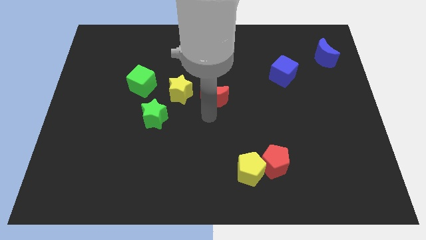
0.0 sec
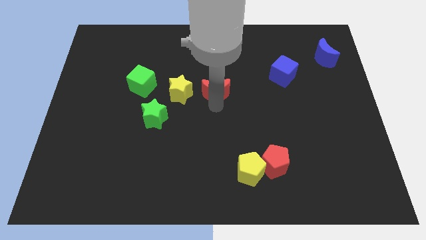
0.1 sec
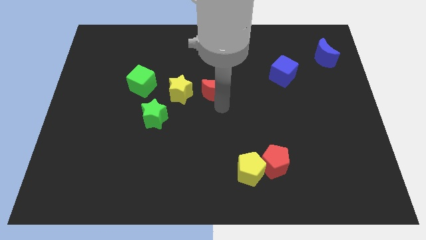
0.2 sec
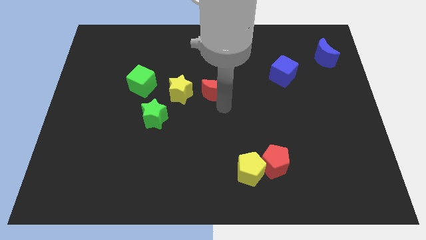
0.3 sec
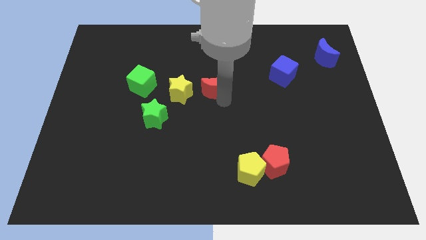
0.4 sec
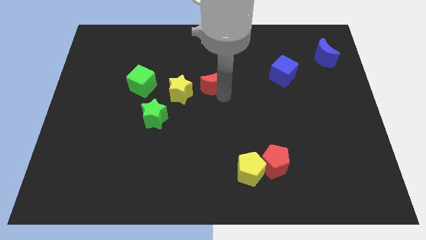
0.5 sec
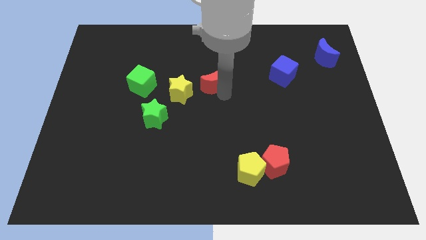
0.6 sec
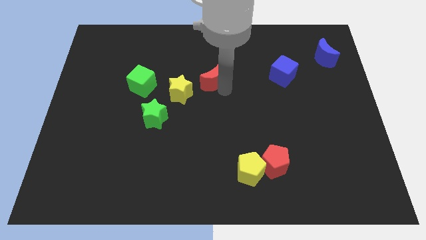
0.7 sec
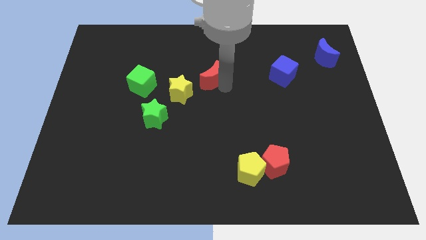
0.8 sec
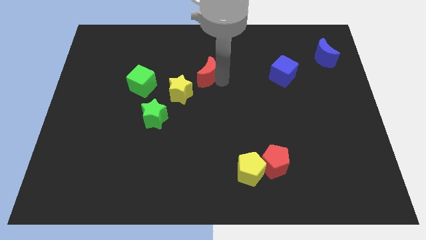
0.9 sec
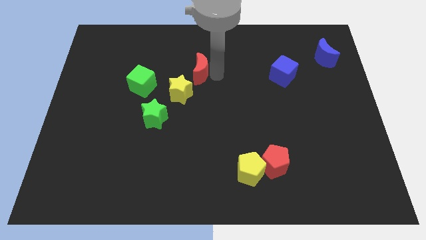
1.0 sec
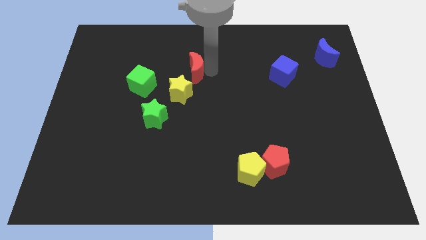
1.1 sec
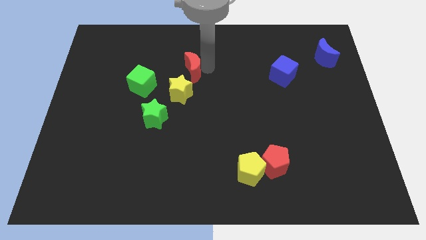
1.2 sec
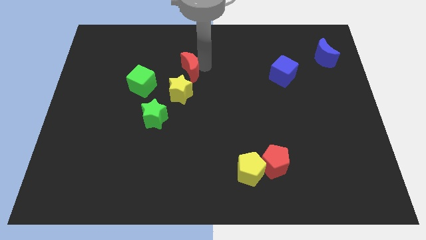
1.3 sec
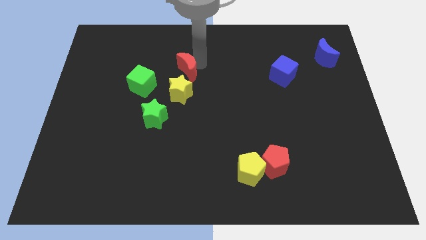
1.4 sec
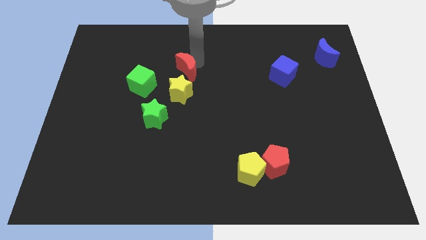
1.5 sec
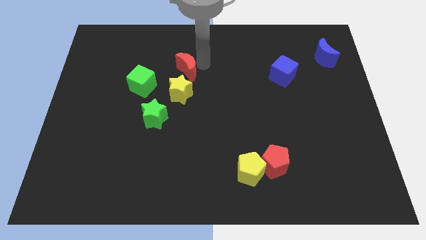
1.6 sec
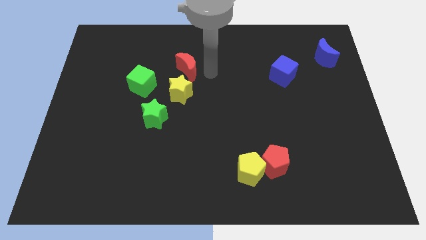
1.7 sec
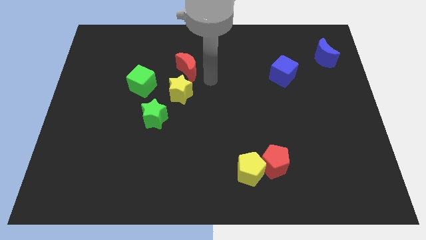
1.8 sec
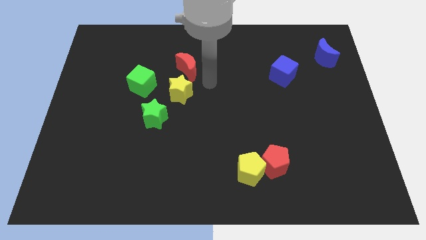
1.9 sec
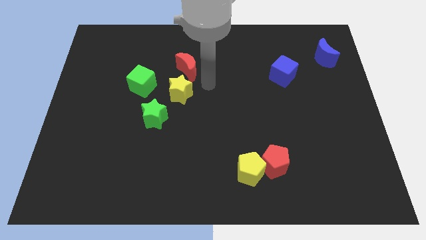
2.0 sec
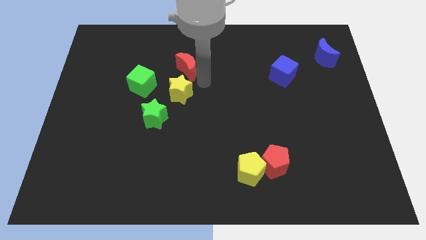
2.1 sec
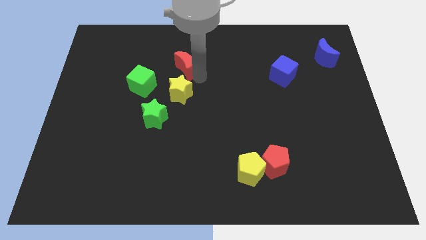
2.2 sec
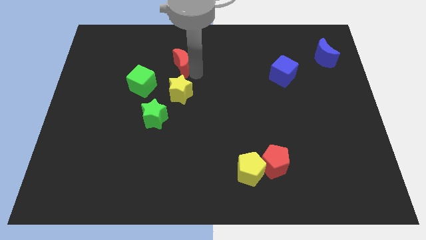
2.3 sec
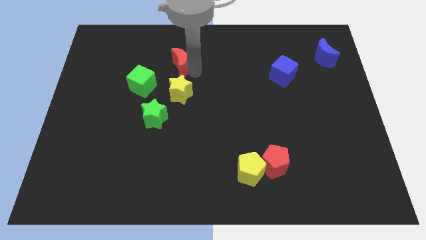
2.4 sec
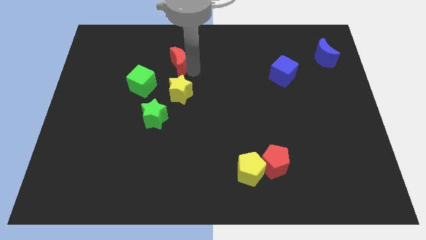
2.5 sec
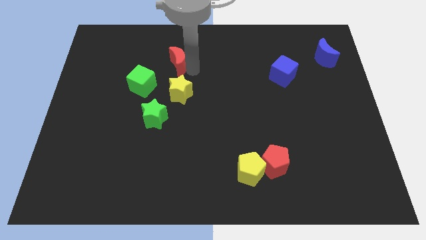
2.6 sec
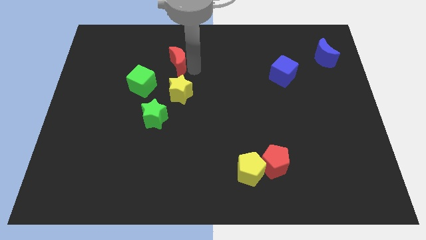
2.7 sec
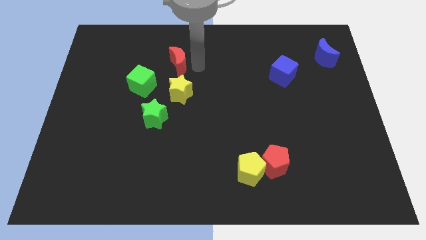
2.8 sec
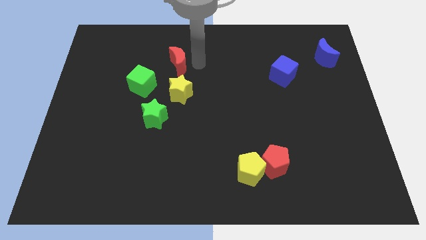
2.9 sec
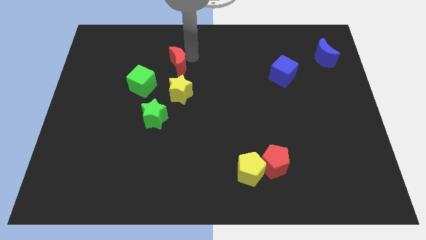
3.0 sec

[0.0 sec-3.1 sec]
move red moon on top of yellow star

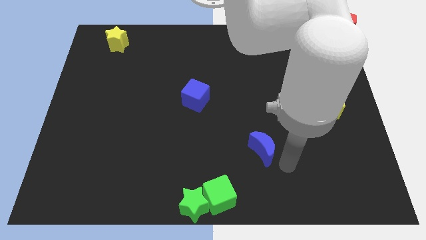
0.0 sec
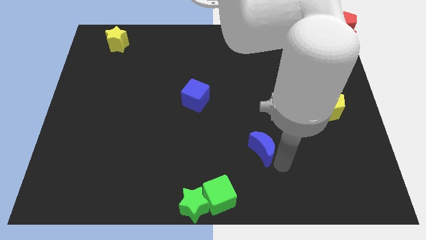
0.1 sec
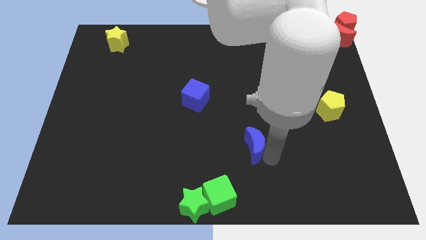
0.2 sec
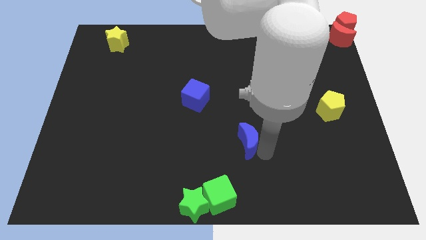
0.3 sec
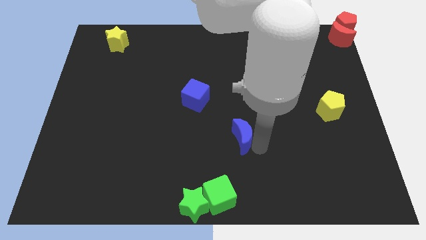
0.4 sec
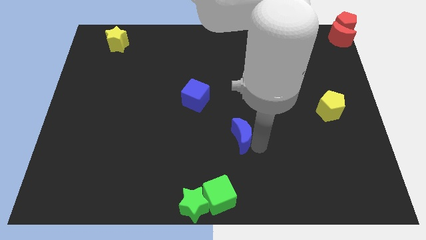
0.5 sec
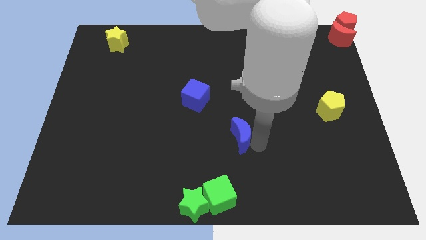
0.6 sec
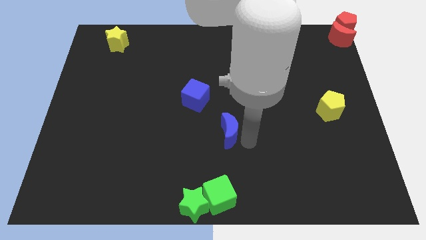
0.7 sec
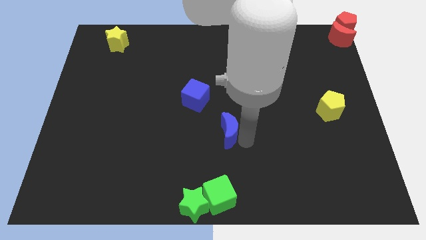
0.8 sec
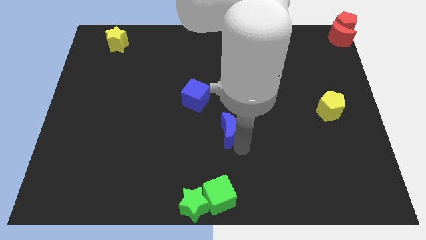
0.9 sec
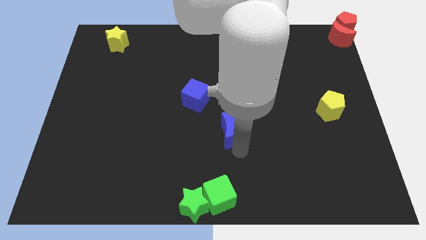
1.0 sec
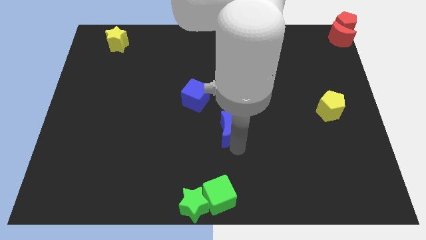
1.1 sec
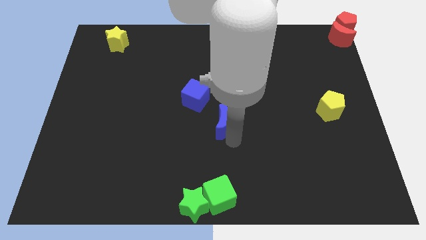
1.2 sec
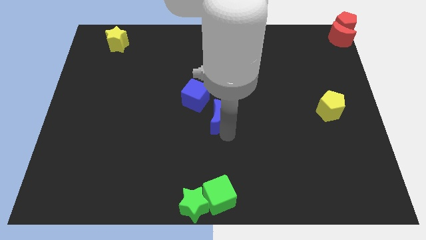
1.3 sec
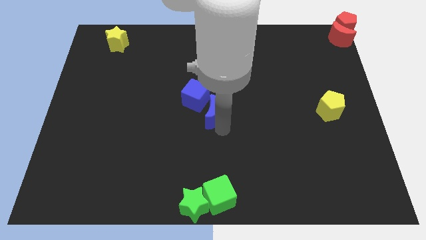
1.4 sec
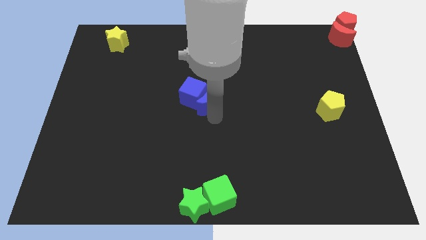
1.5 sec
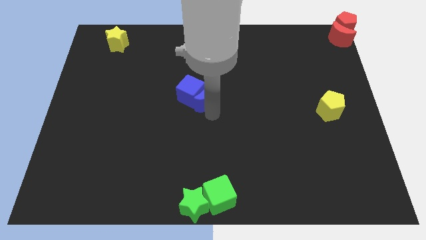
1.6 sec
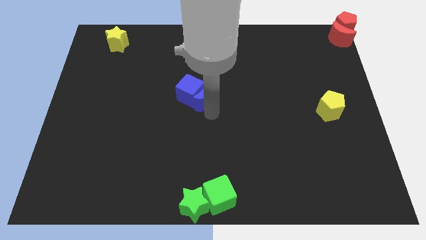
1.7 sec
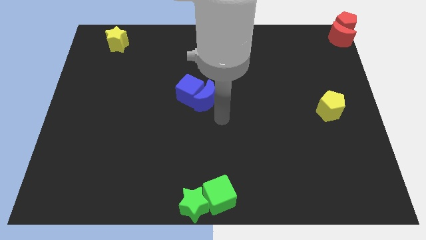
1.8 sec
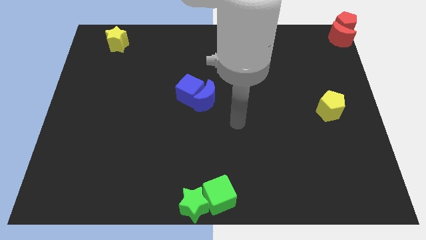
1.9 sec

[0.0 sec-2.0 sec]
move the blue crescent into the blue cube

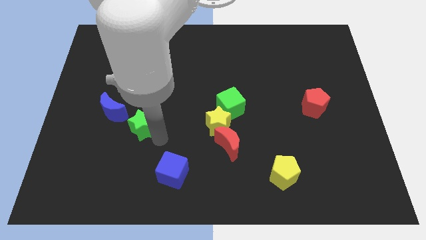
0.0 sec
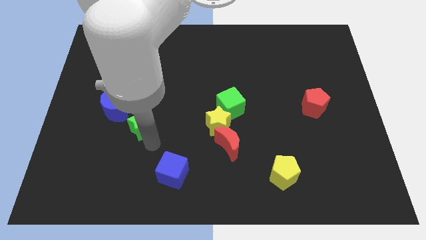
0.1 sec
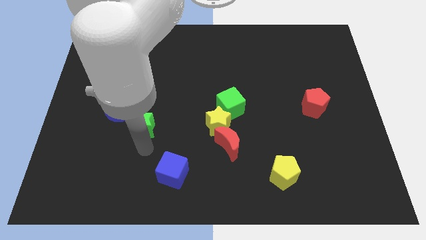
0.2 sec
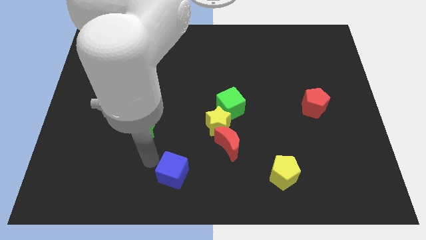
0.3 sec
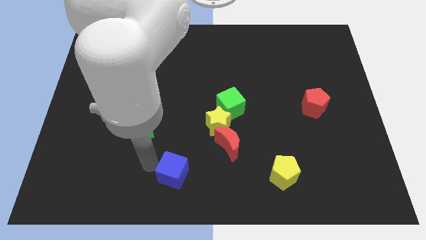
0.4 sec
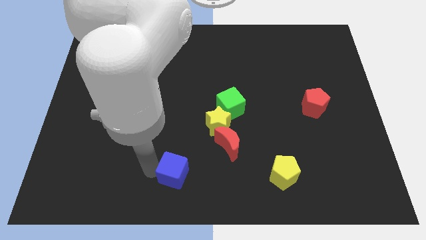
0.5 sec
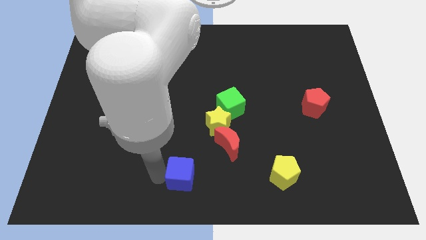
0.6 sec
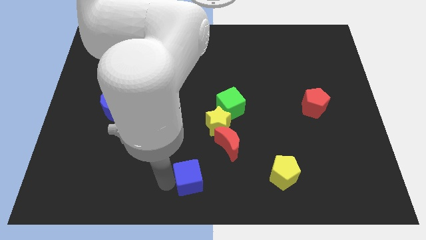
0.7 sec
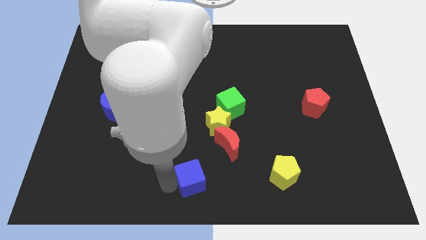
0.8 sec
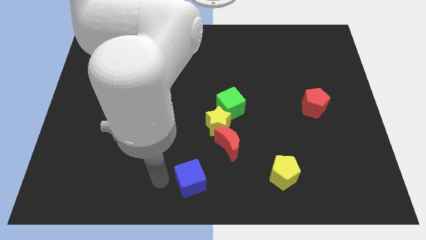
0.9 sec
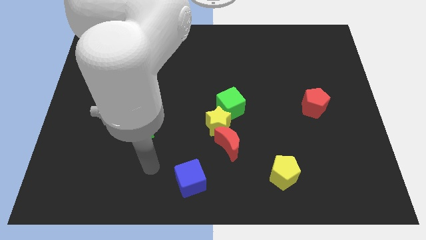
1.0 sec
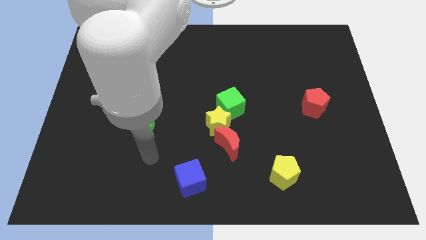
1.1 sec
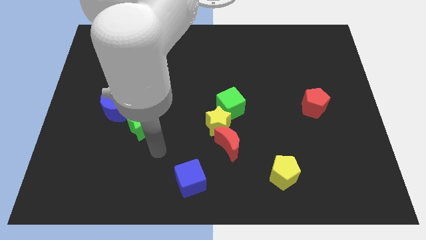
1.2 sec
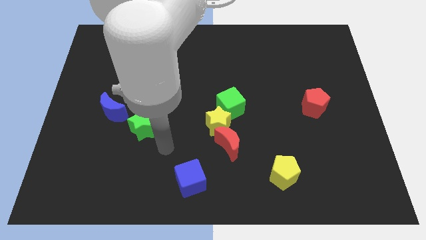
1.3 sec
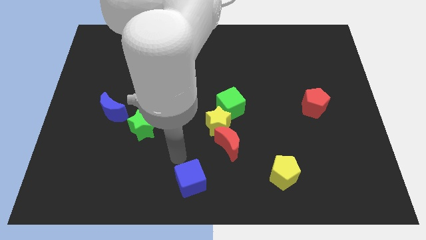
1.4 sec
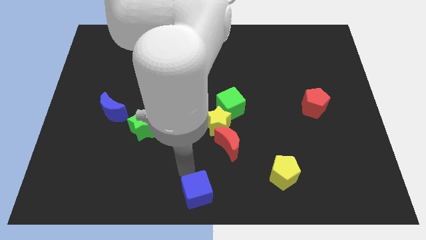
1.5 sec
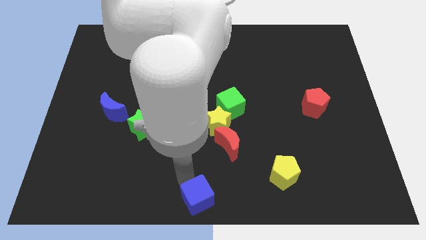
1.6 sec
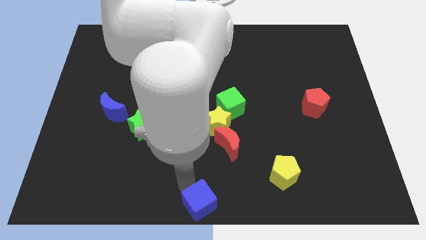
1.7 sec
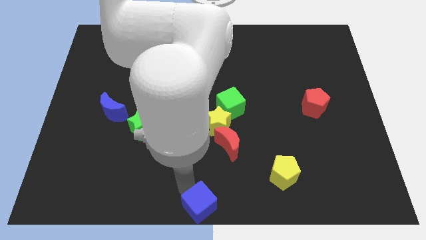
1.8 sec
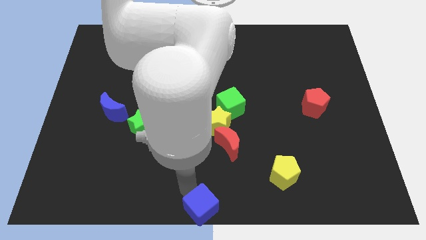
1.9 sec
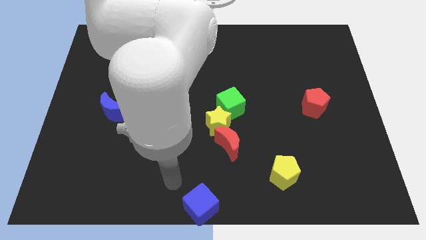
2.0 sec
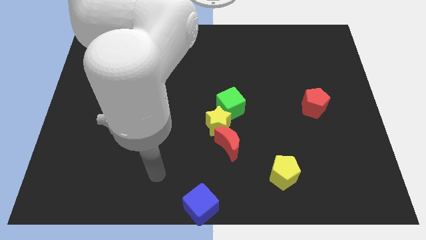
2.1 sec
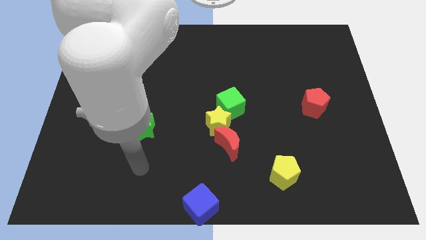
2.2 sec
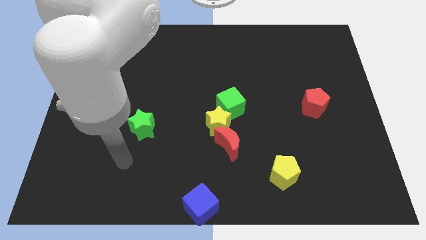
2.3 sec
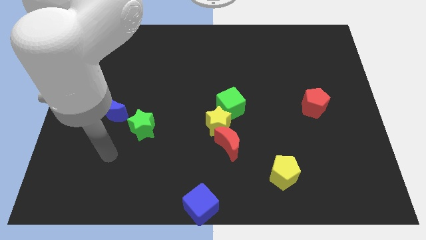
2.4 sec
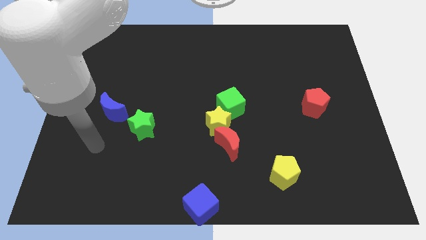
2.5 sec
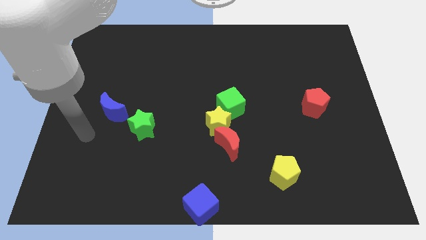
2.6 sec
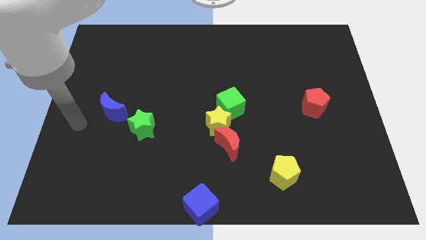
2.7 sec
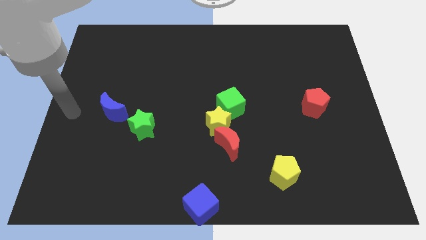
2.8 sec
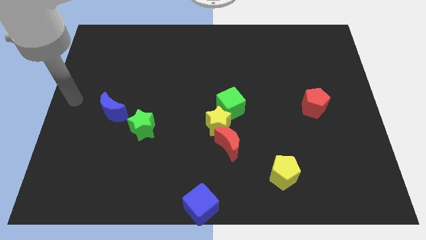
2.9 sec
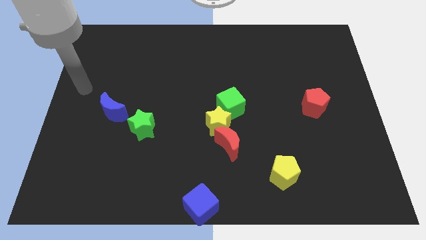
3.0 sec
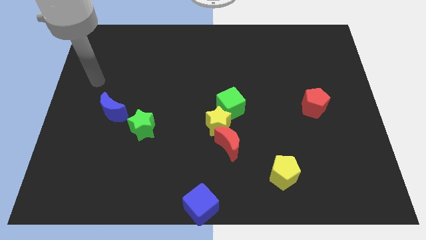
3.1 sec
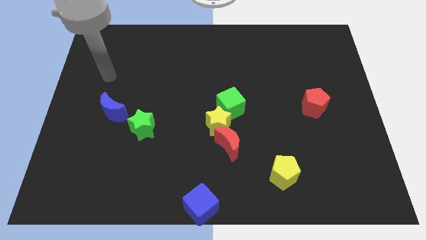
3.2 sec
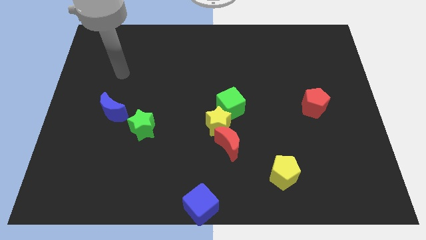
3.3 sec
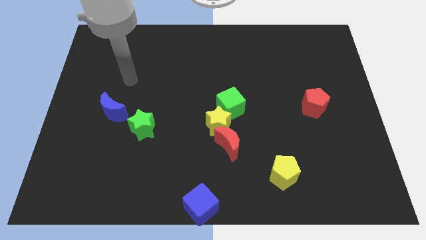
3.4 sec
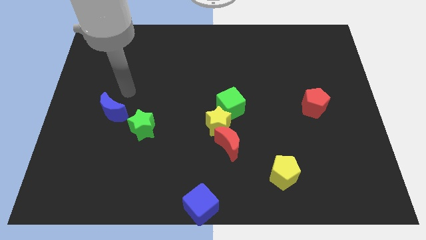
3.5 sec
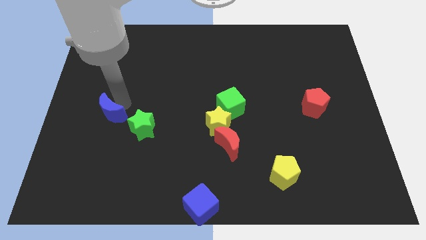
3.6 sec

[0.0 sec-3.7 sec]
place the blue cube towards the bottom center of the board

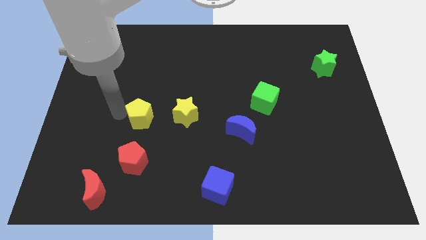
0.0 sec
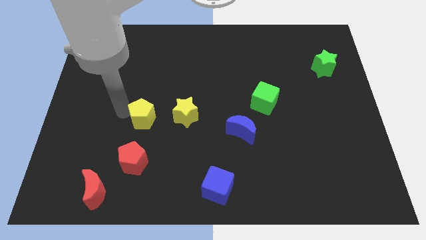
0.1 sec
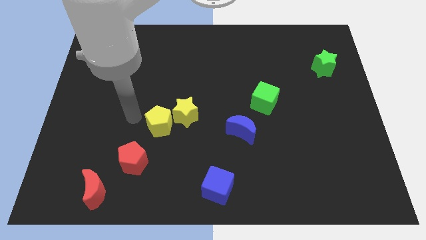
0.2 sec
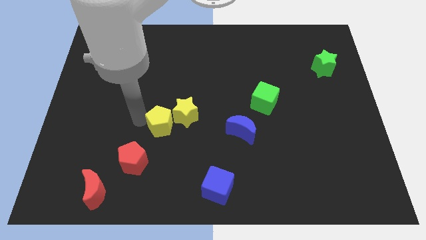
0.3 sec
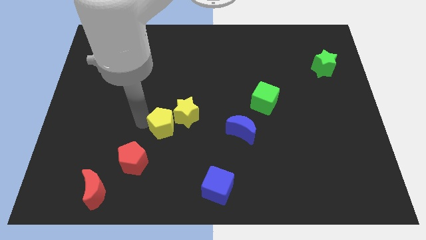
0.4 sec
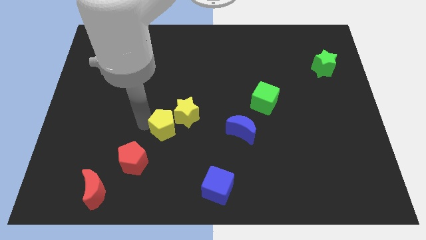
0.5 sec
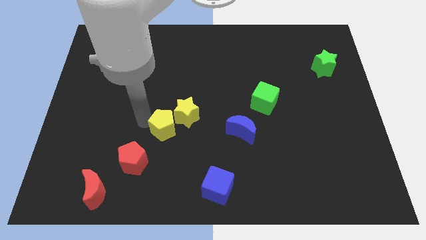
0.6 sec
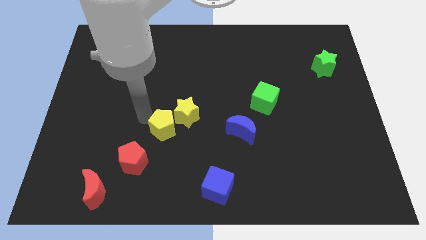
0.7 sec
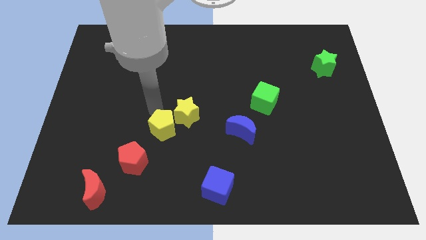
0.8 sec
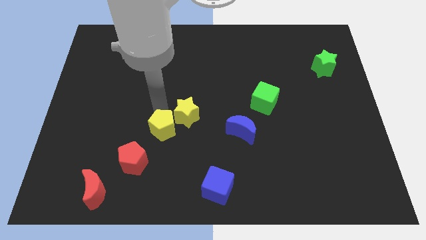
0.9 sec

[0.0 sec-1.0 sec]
place the yellow pentagon close to the yellow star
